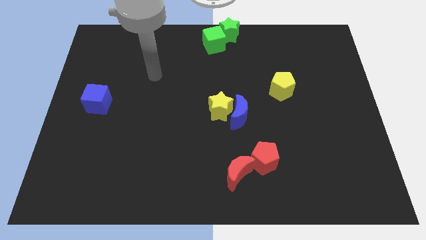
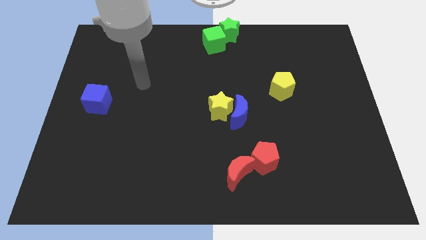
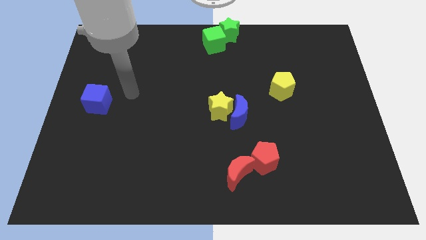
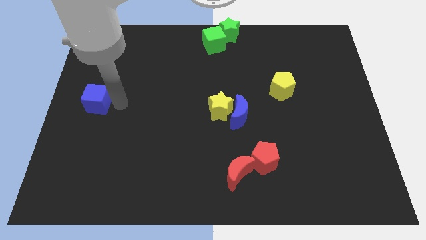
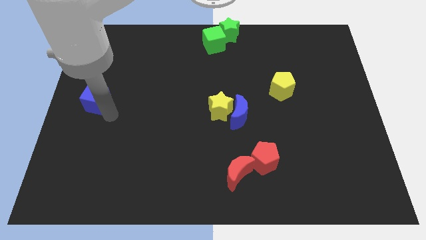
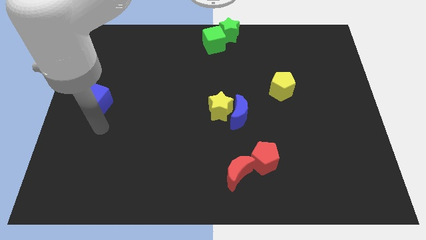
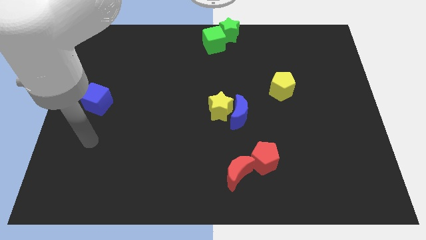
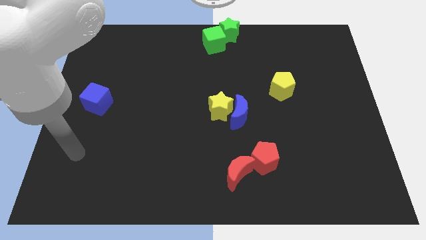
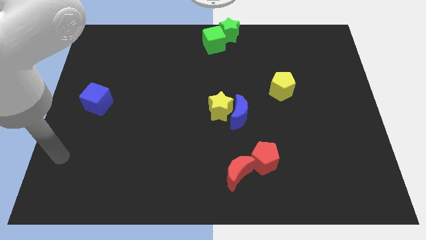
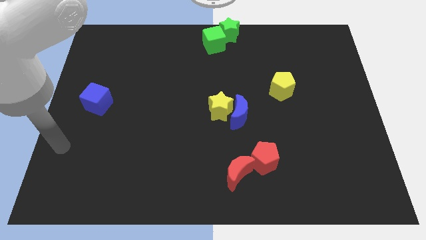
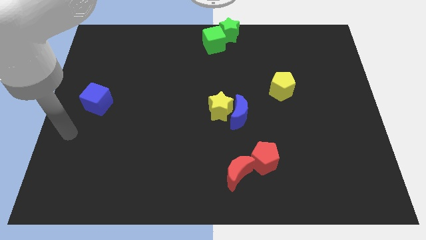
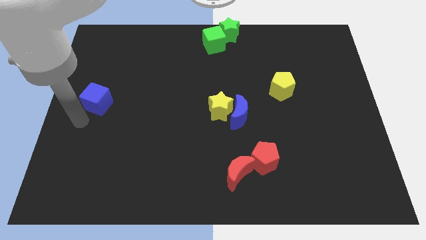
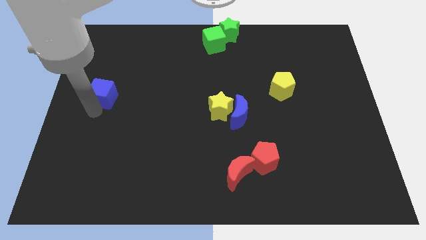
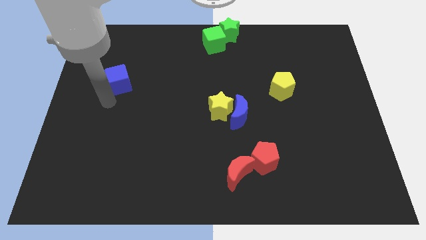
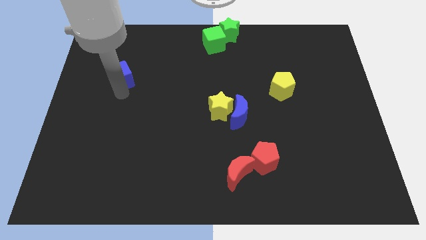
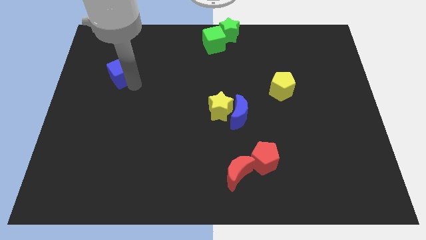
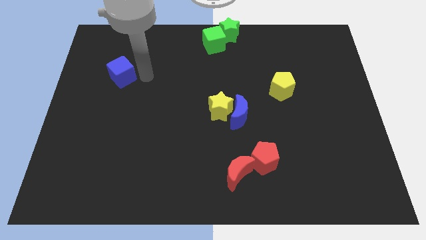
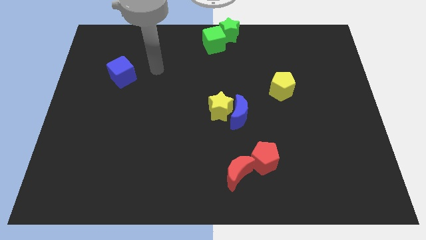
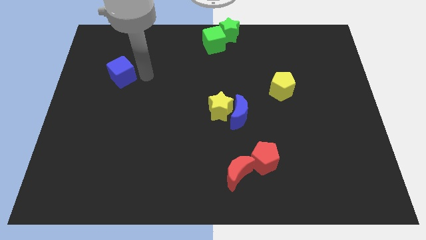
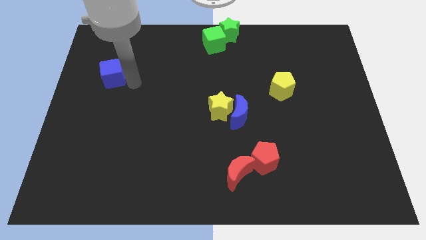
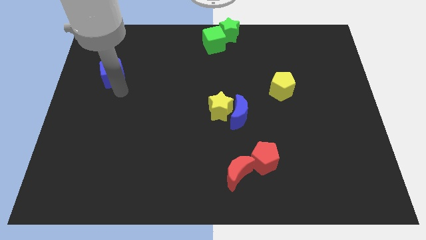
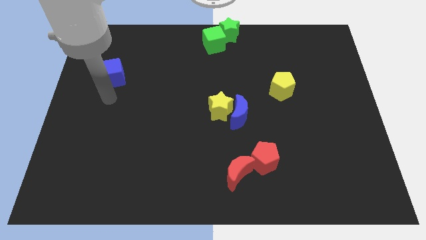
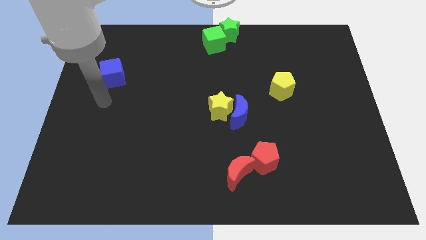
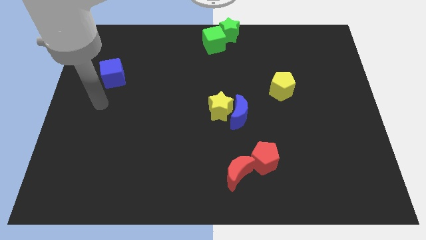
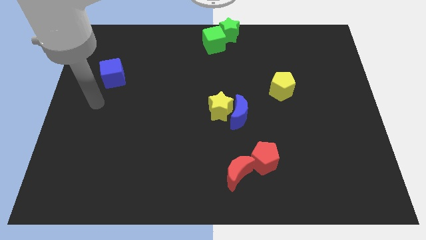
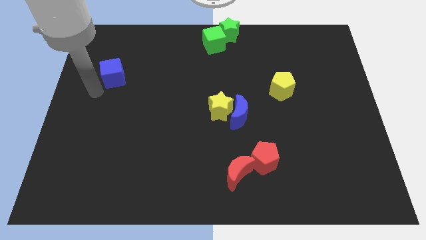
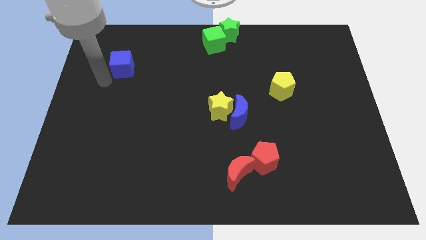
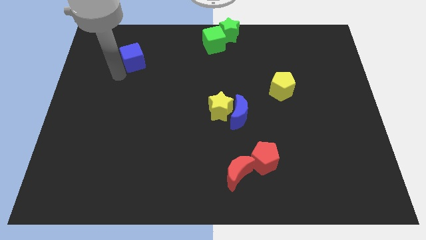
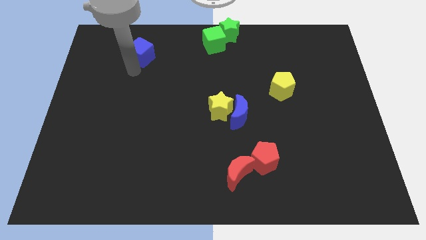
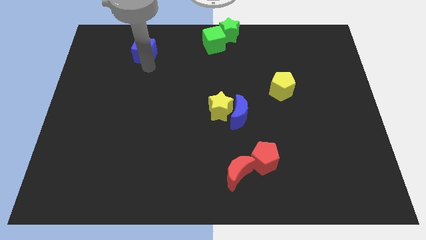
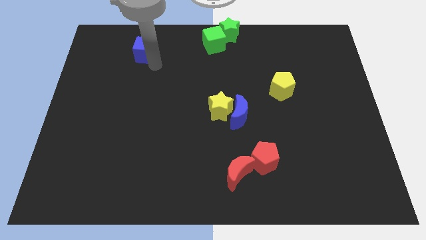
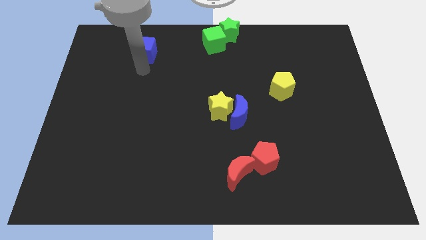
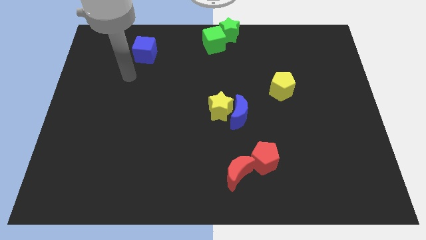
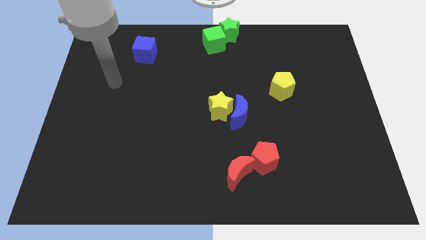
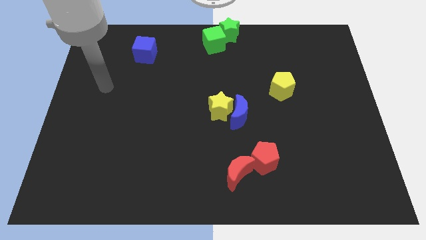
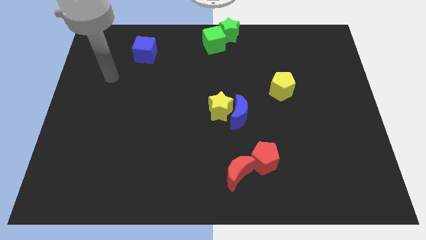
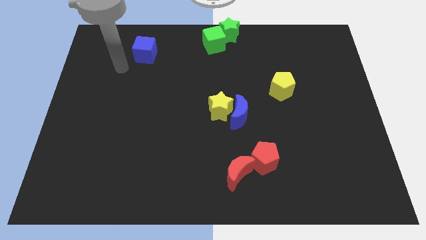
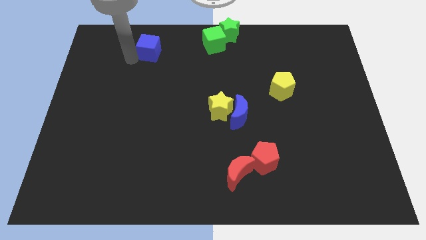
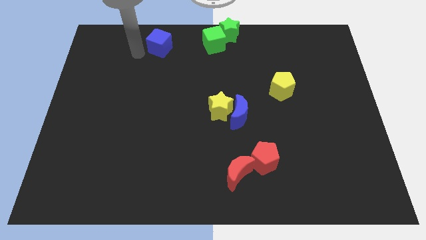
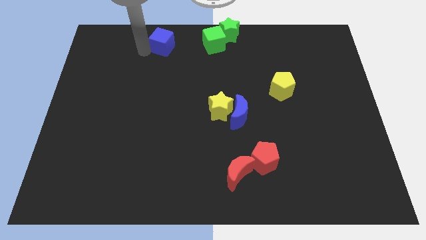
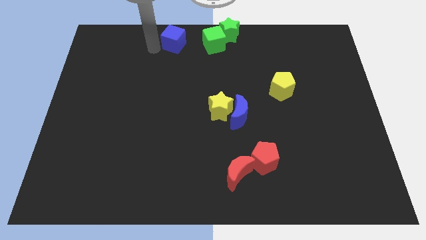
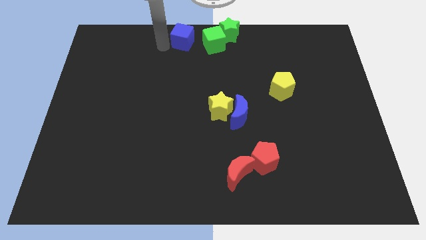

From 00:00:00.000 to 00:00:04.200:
slide the blue cube parallel left to the green cube

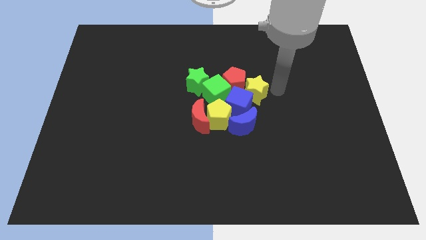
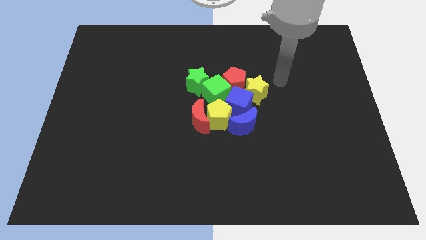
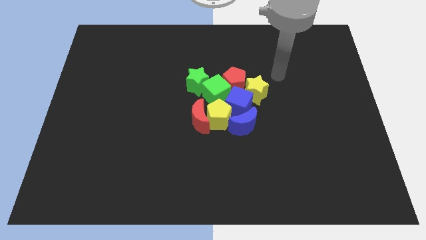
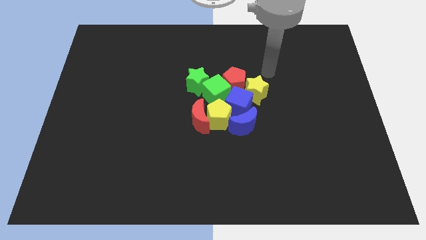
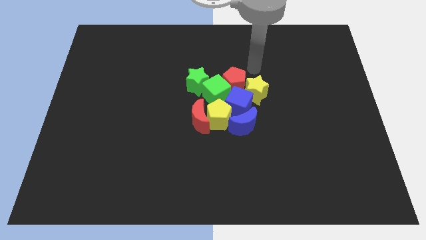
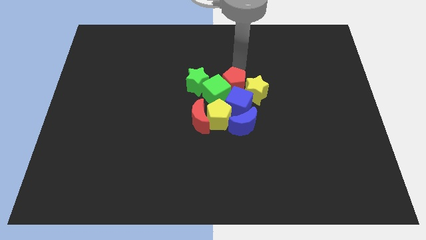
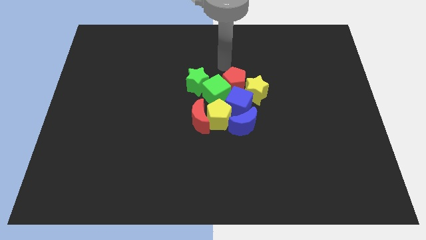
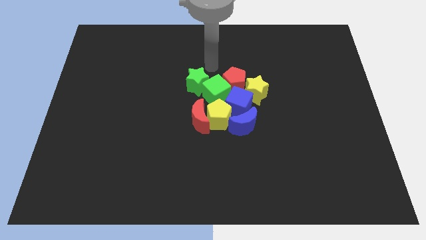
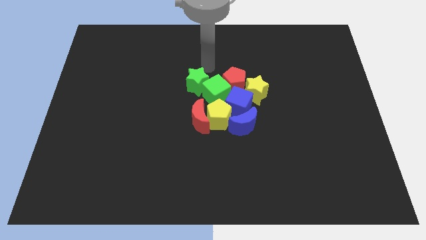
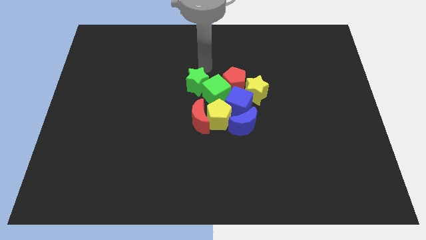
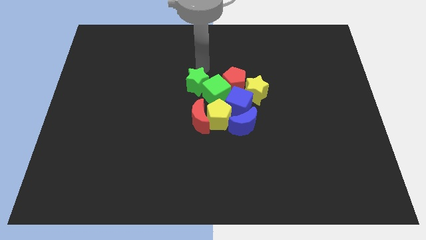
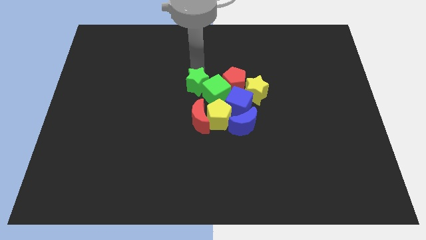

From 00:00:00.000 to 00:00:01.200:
move your arm on top of the green star

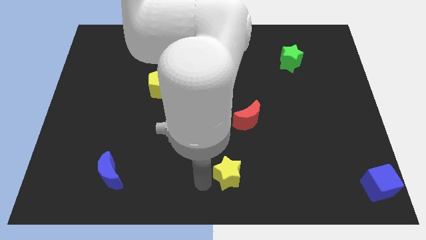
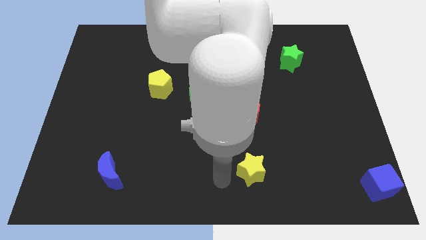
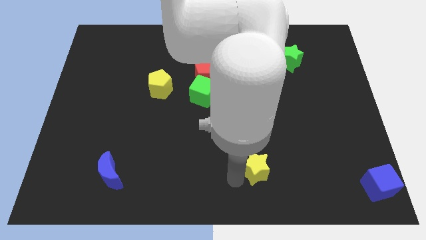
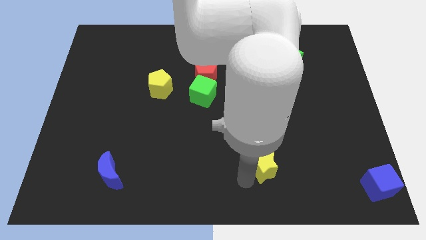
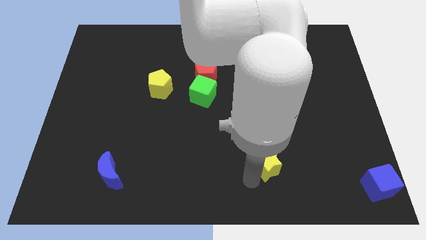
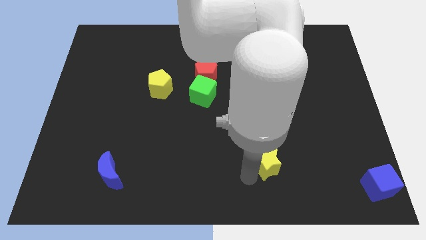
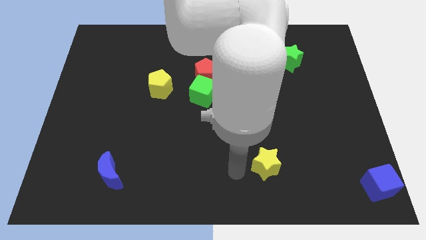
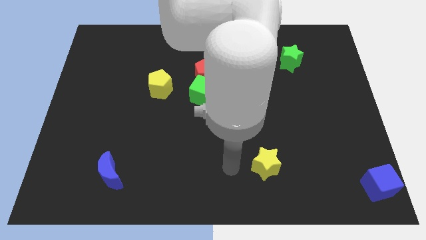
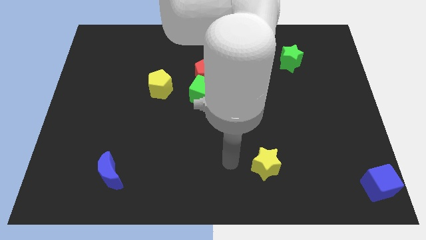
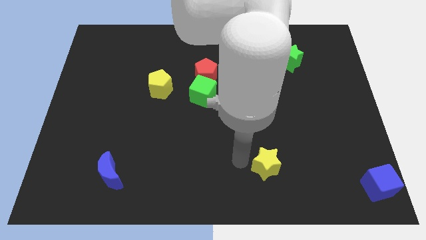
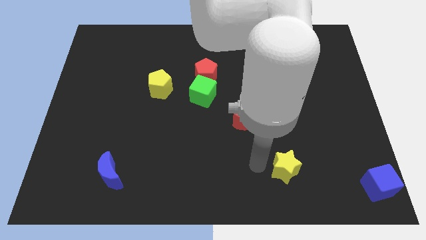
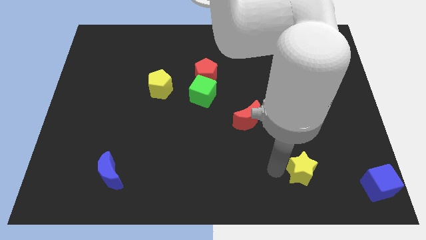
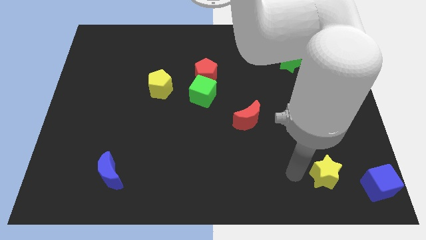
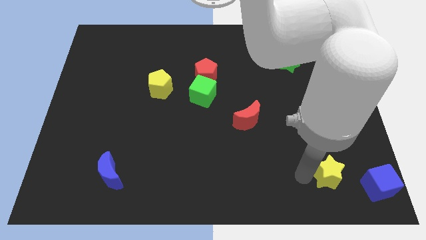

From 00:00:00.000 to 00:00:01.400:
move the yellow star to the bottom right corner

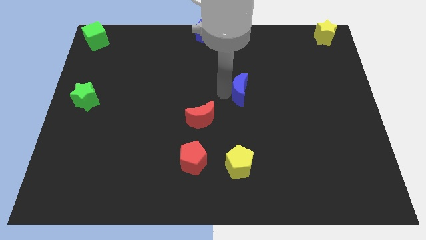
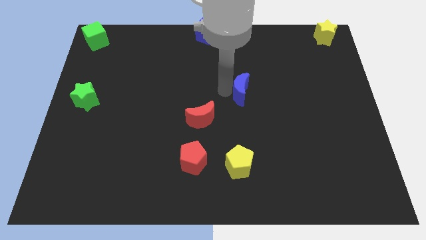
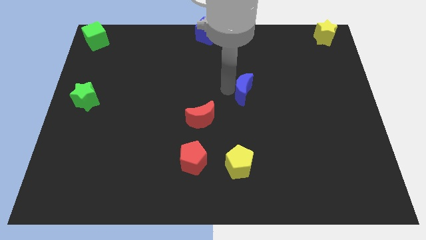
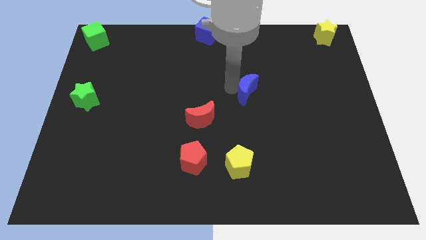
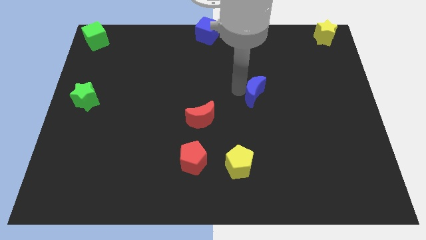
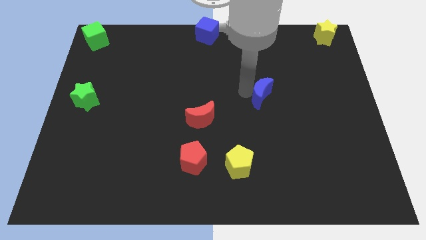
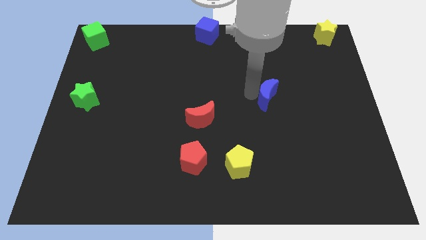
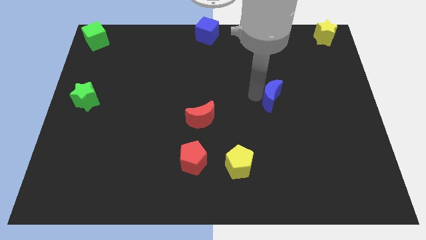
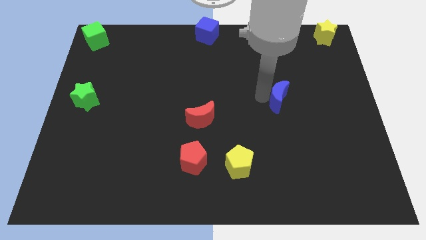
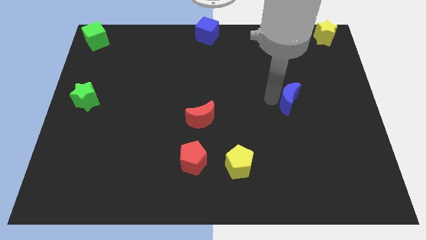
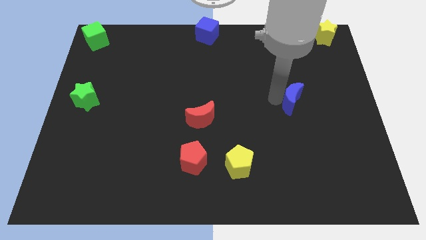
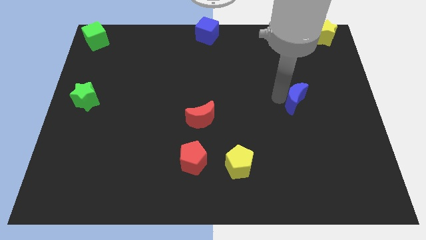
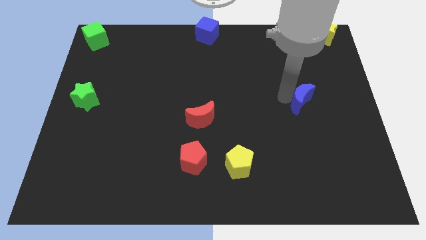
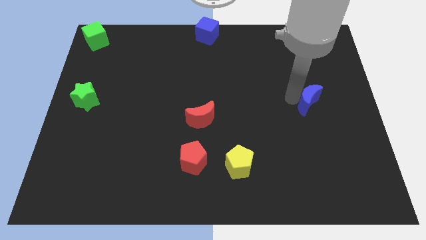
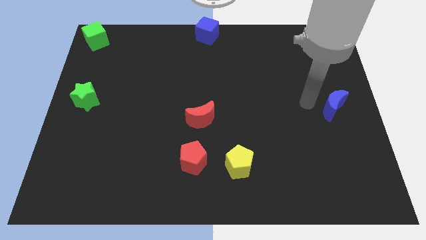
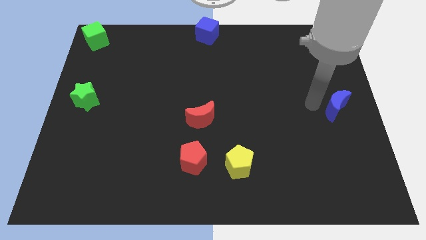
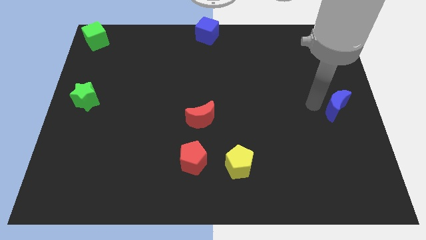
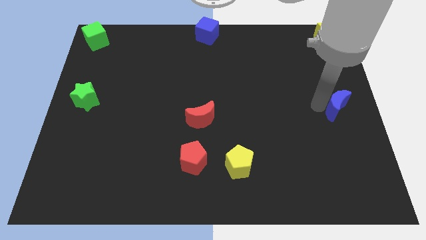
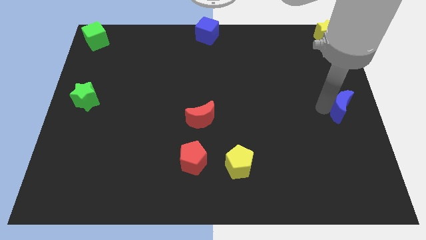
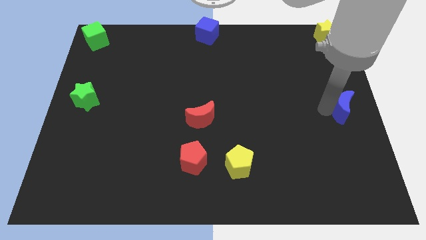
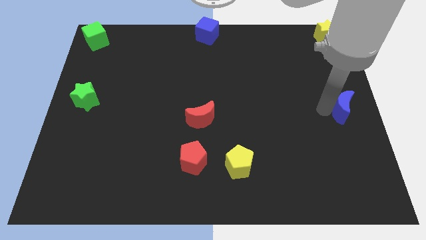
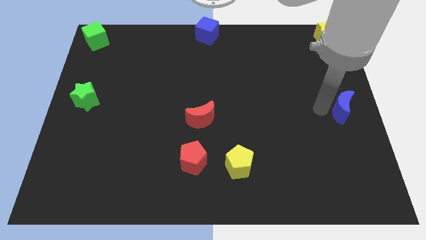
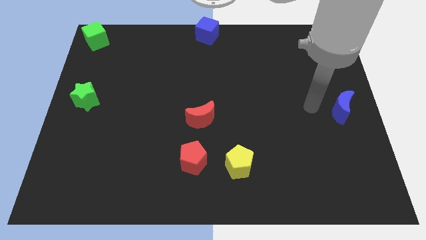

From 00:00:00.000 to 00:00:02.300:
push the blue moon towards the center right of the board
